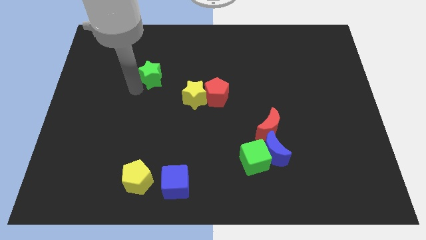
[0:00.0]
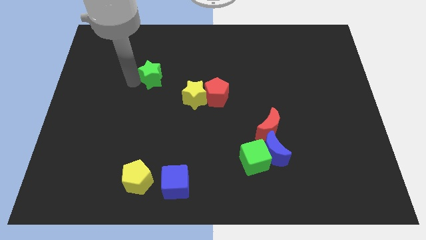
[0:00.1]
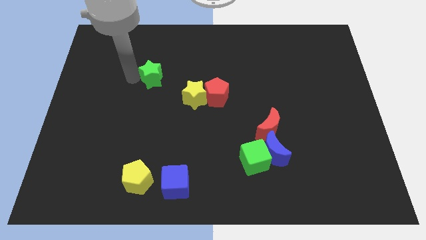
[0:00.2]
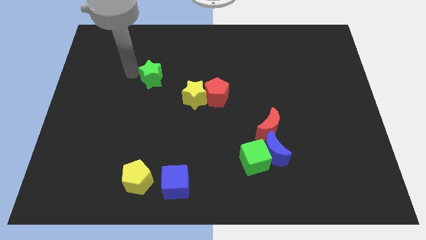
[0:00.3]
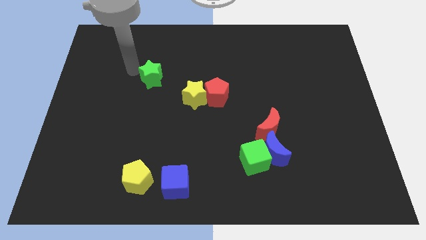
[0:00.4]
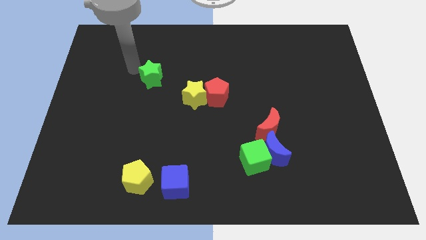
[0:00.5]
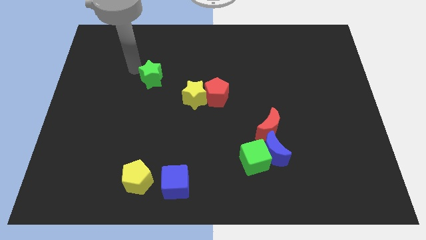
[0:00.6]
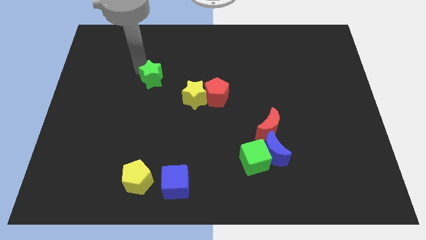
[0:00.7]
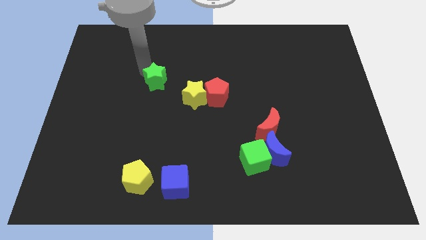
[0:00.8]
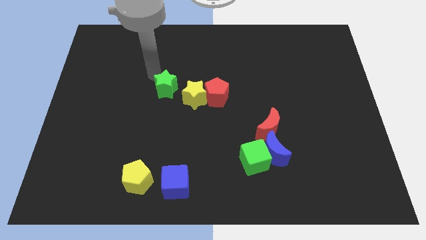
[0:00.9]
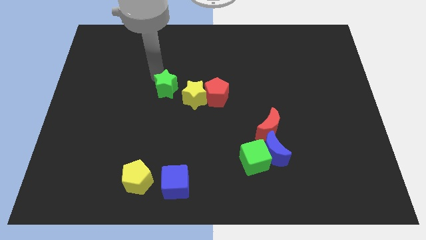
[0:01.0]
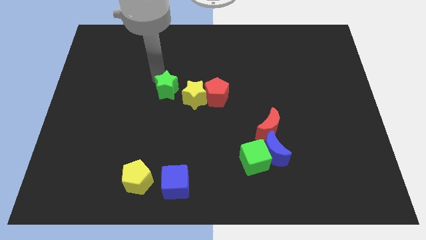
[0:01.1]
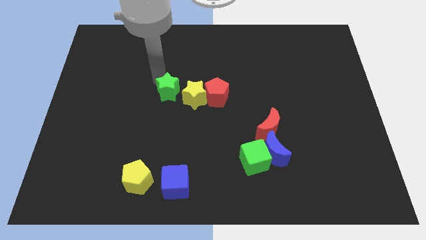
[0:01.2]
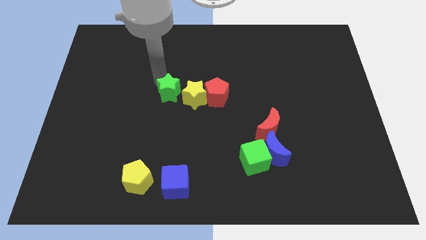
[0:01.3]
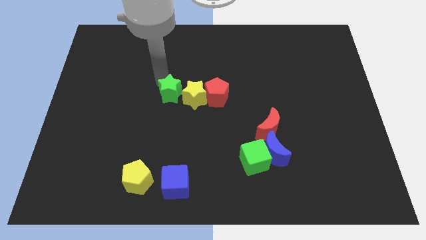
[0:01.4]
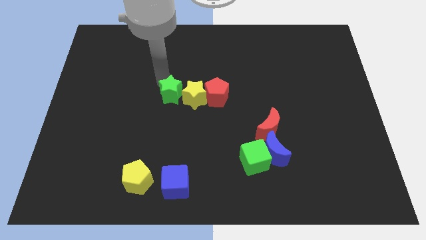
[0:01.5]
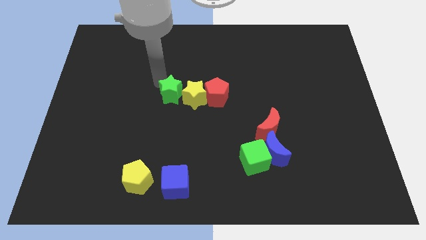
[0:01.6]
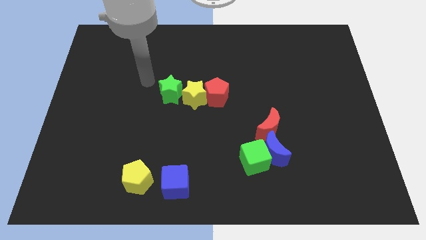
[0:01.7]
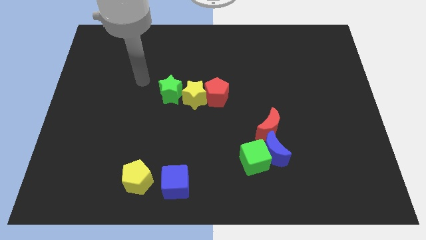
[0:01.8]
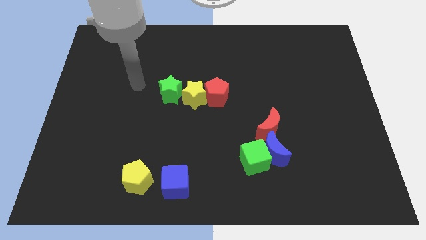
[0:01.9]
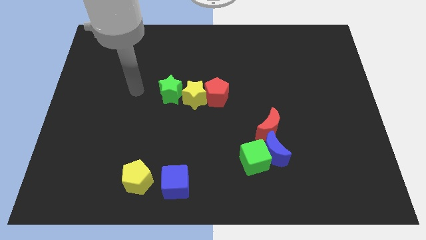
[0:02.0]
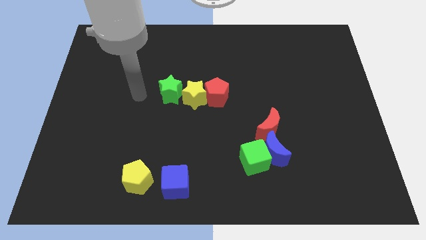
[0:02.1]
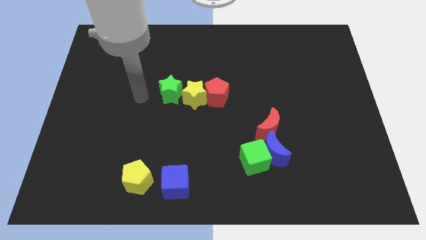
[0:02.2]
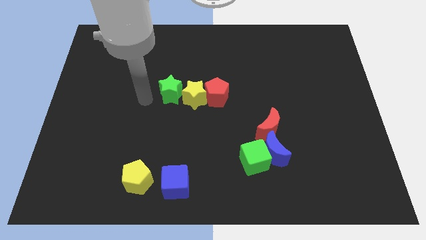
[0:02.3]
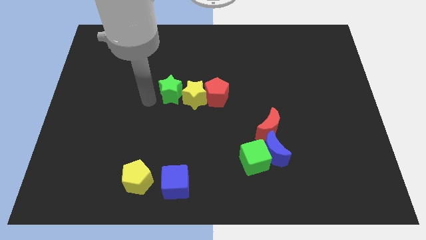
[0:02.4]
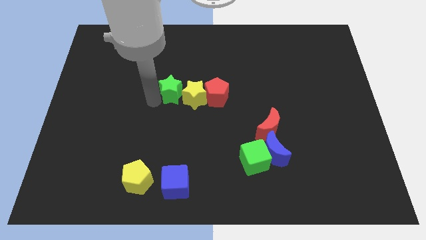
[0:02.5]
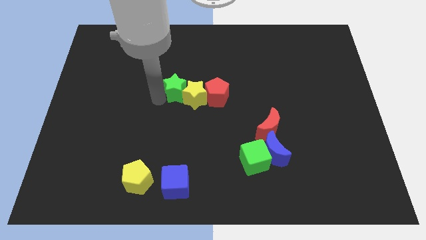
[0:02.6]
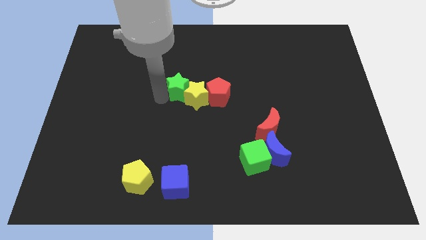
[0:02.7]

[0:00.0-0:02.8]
move the green star on the left side of the yellow star

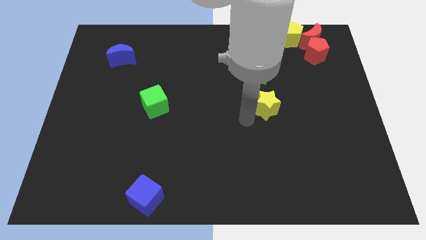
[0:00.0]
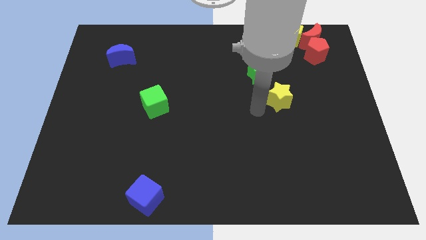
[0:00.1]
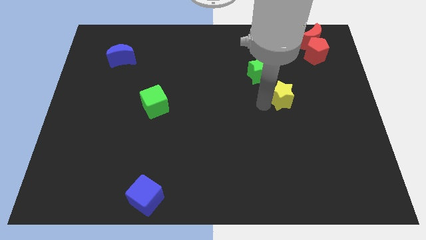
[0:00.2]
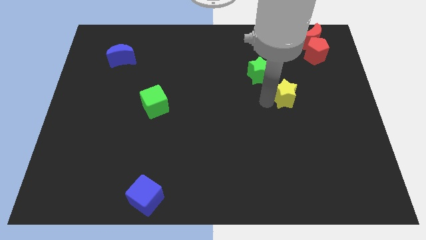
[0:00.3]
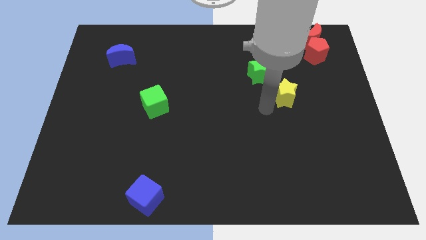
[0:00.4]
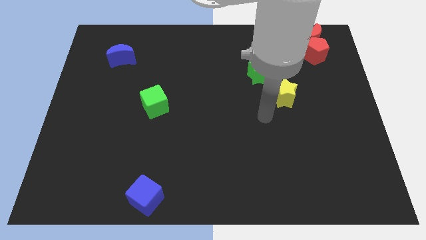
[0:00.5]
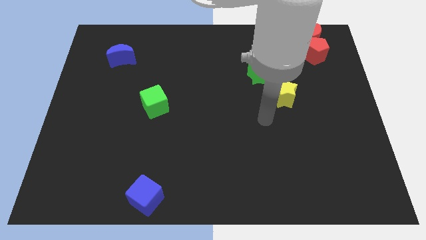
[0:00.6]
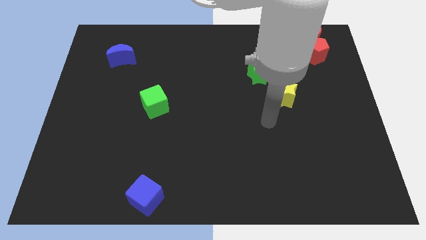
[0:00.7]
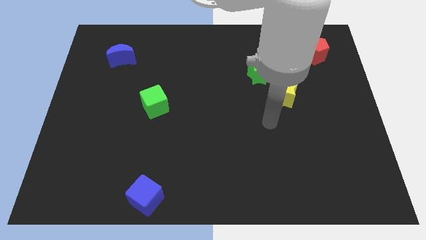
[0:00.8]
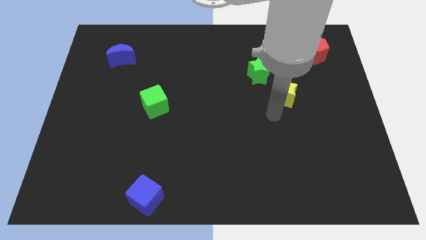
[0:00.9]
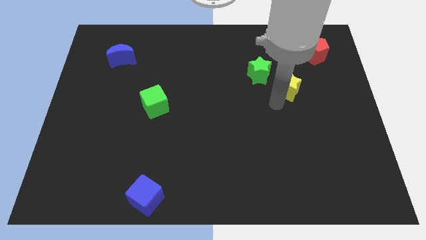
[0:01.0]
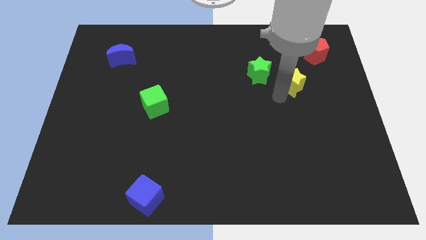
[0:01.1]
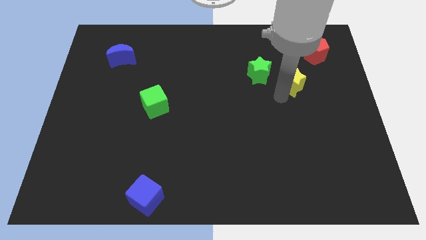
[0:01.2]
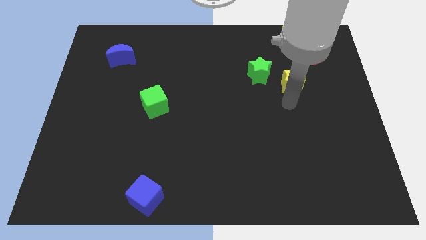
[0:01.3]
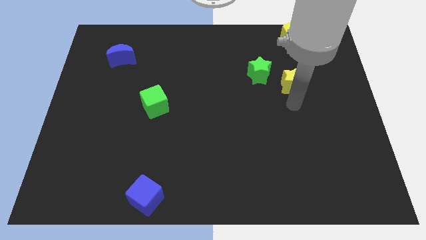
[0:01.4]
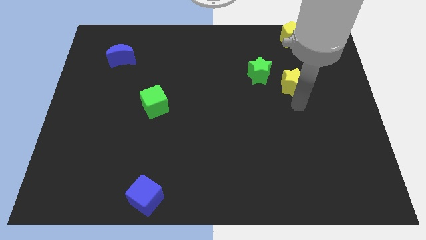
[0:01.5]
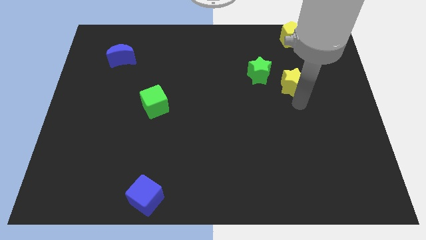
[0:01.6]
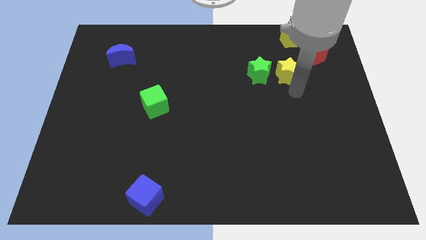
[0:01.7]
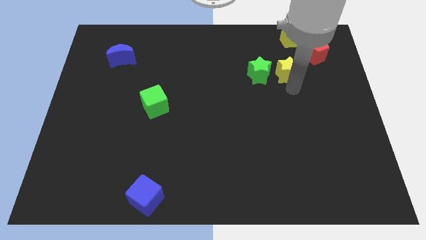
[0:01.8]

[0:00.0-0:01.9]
place yellow star beside green star

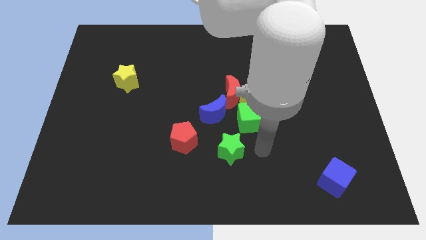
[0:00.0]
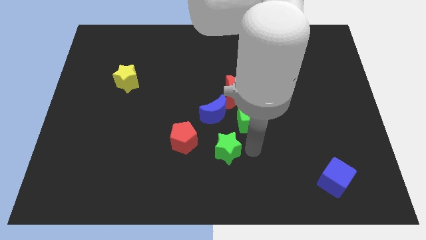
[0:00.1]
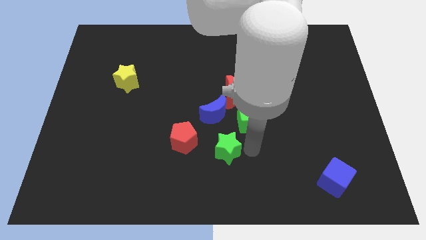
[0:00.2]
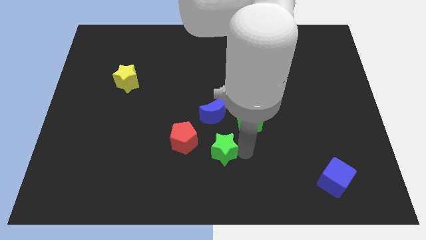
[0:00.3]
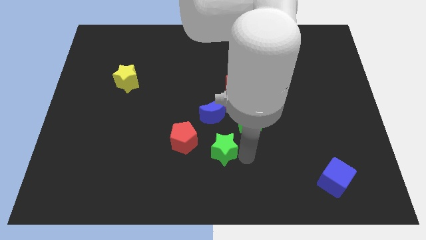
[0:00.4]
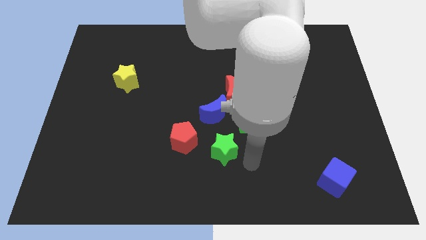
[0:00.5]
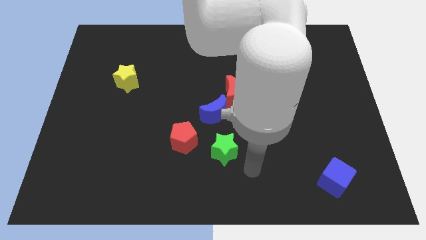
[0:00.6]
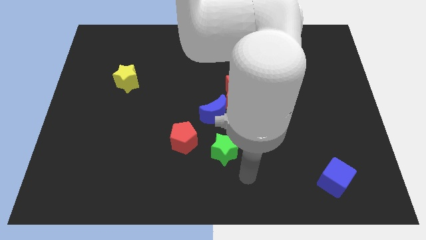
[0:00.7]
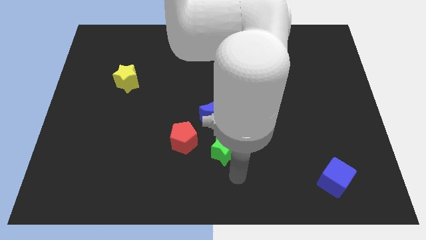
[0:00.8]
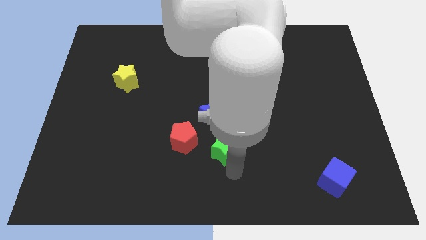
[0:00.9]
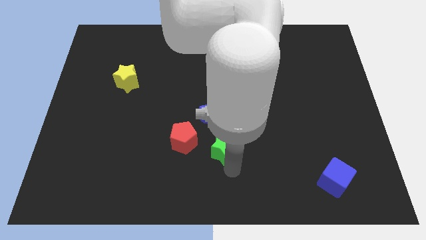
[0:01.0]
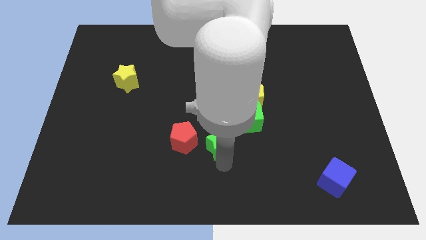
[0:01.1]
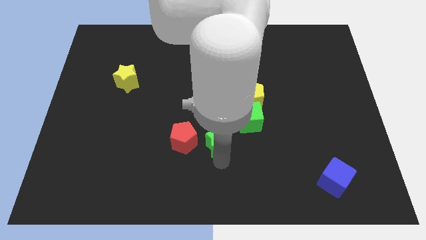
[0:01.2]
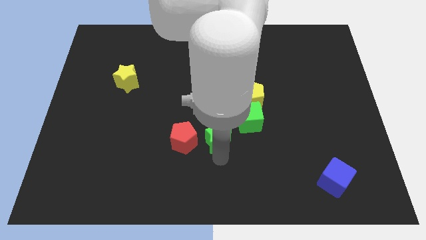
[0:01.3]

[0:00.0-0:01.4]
push the green star to the bottom of the blue crescent

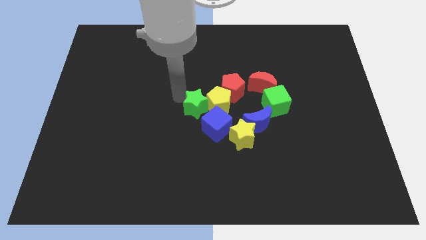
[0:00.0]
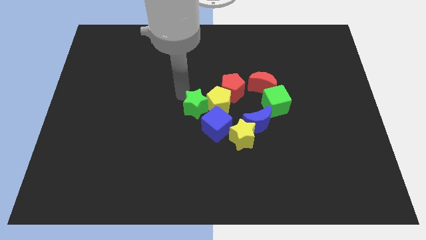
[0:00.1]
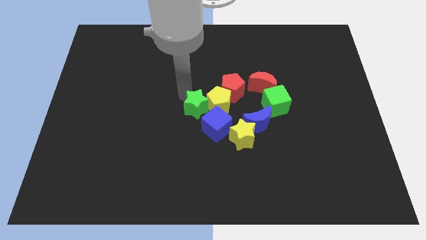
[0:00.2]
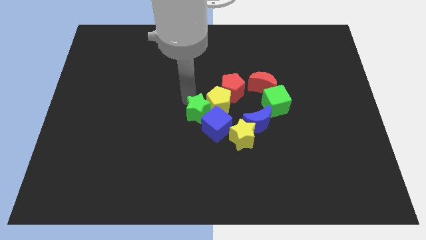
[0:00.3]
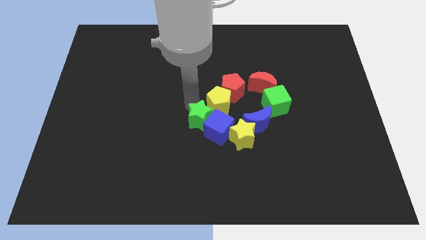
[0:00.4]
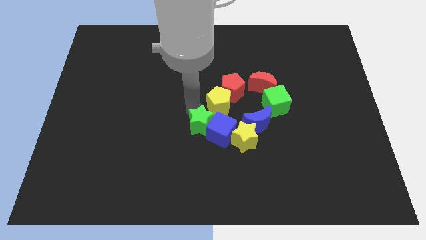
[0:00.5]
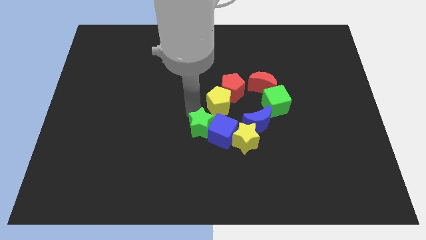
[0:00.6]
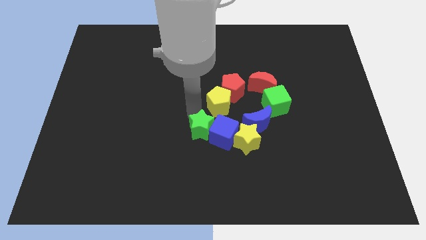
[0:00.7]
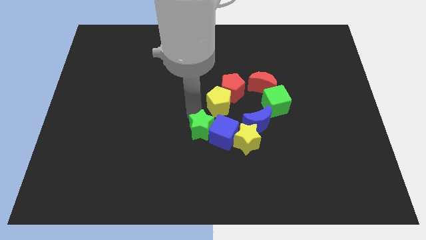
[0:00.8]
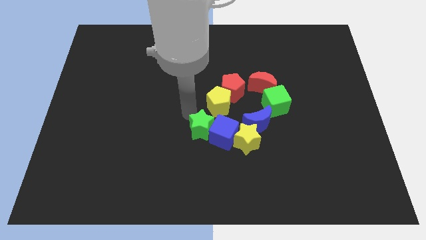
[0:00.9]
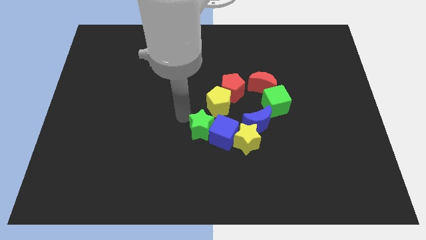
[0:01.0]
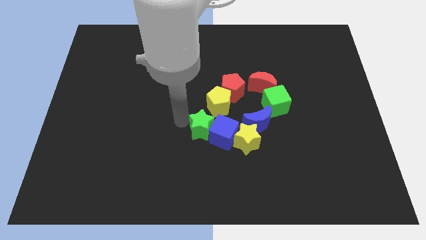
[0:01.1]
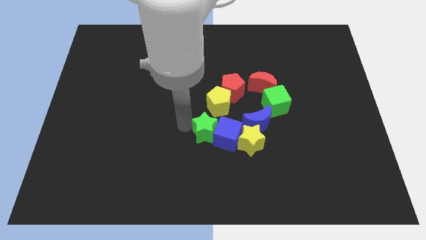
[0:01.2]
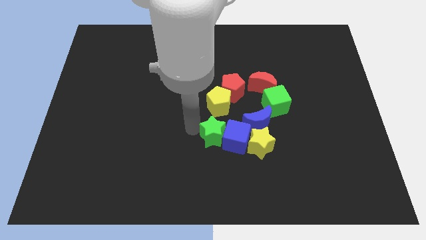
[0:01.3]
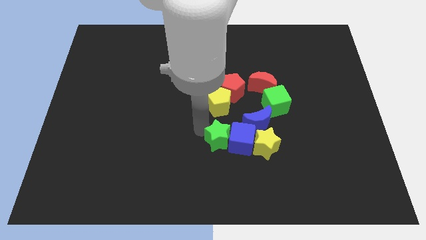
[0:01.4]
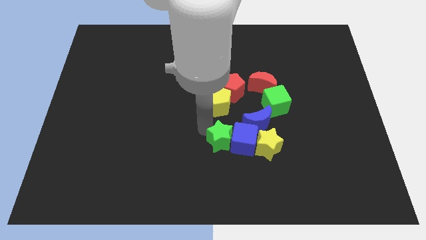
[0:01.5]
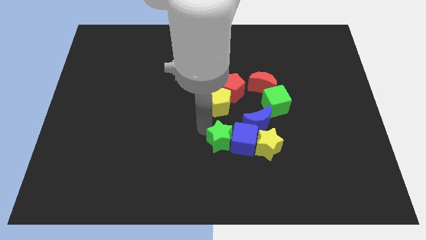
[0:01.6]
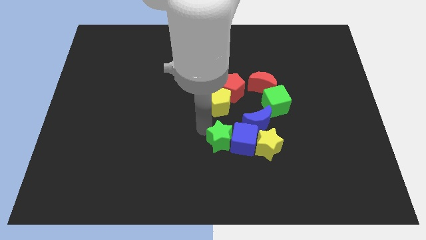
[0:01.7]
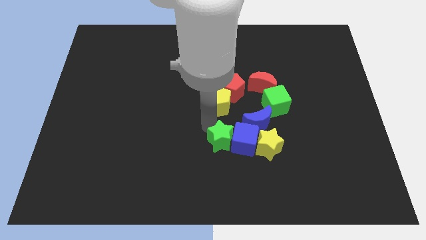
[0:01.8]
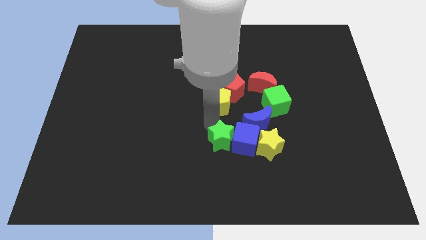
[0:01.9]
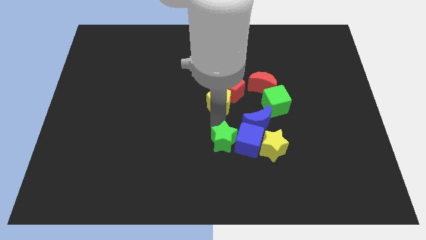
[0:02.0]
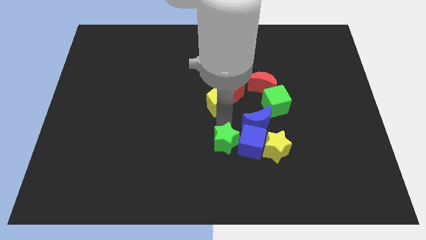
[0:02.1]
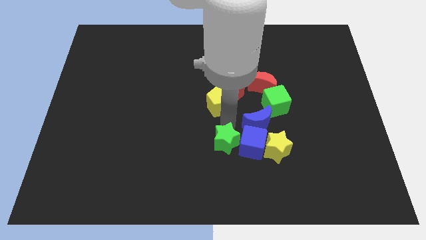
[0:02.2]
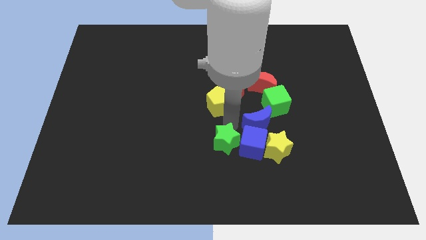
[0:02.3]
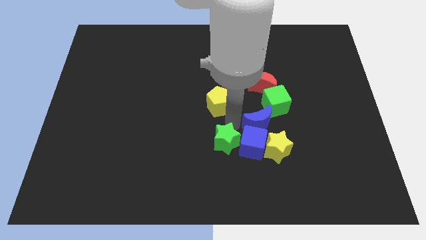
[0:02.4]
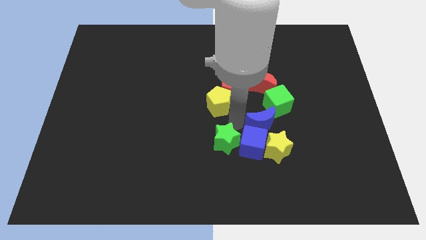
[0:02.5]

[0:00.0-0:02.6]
move green starblue cube and yellow star towards right

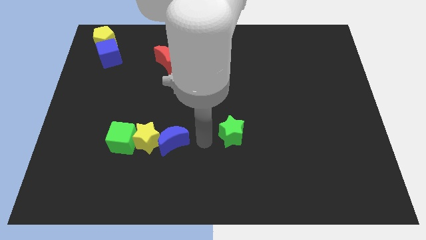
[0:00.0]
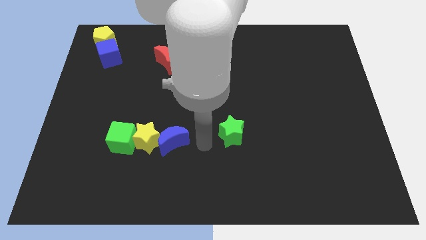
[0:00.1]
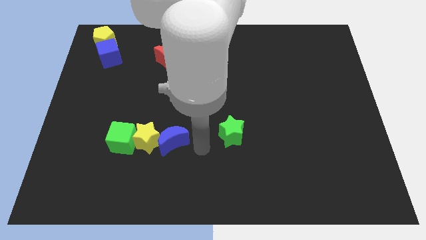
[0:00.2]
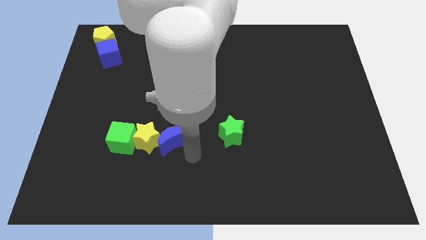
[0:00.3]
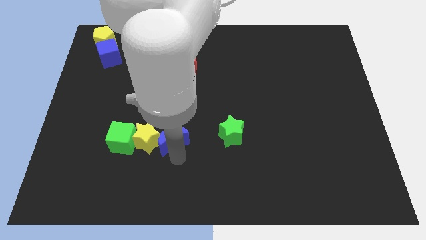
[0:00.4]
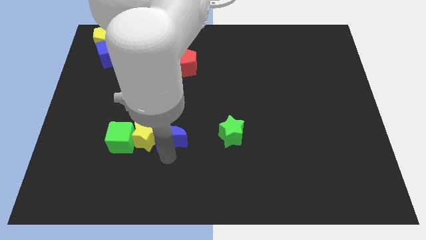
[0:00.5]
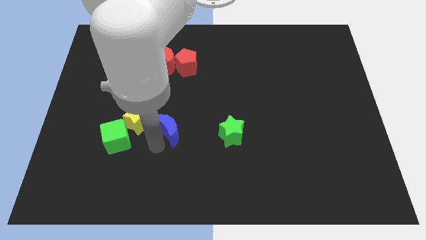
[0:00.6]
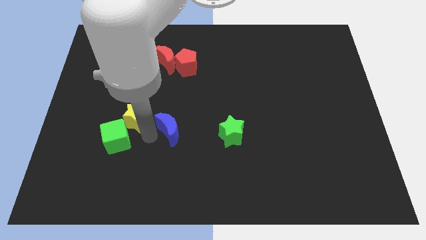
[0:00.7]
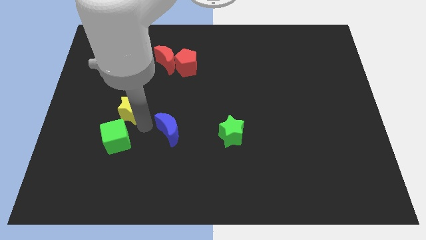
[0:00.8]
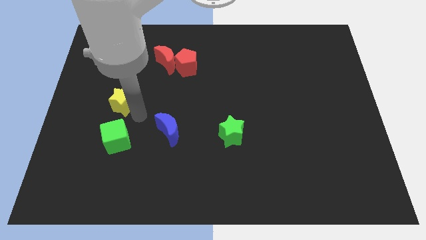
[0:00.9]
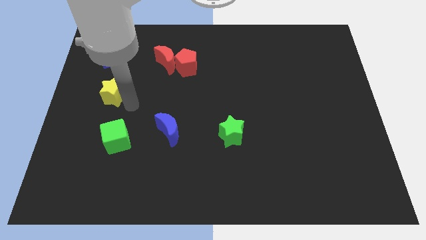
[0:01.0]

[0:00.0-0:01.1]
separate the blocks
